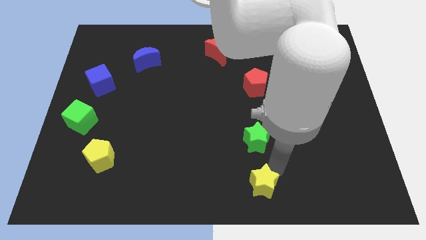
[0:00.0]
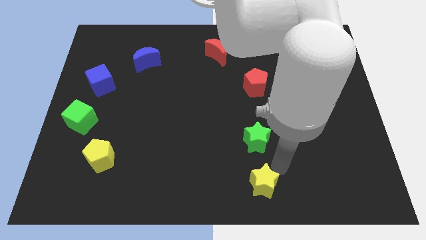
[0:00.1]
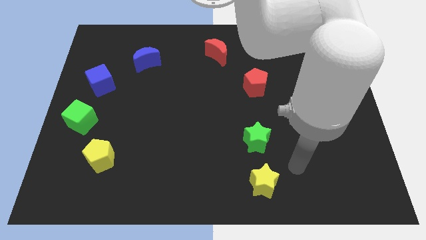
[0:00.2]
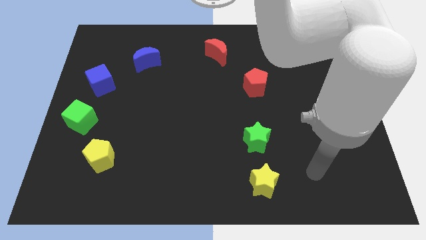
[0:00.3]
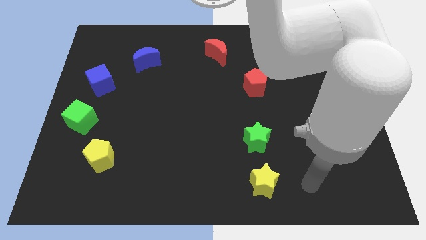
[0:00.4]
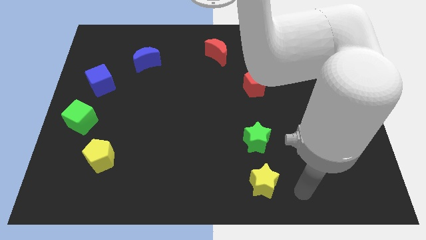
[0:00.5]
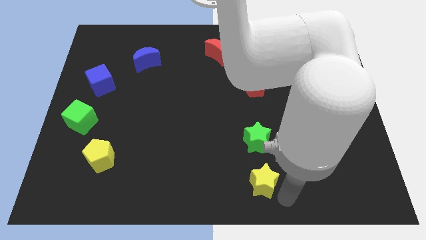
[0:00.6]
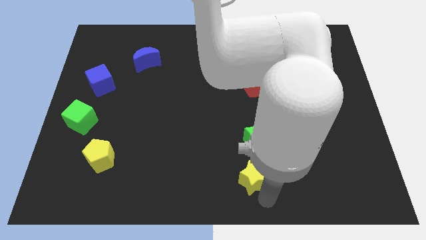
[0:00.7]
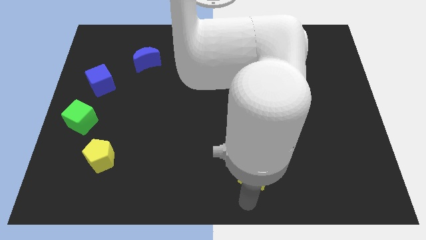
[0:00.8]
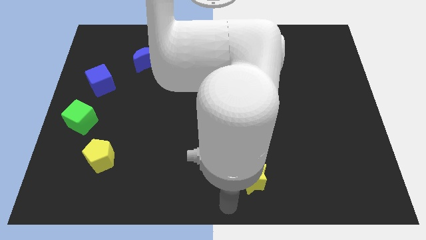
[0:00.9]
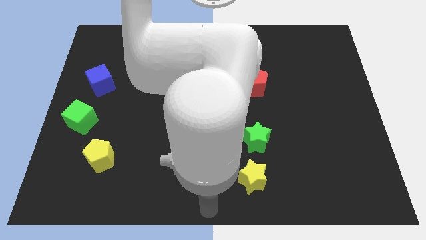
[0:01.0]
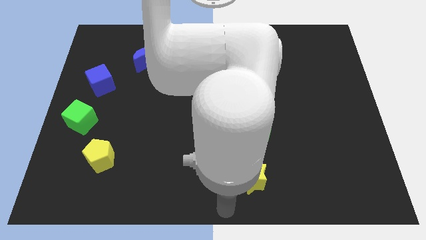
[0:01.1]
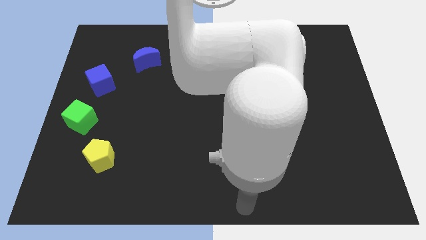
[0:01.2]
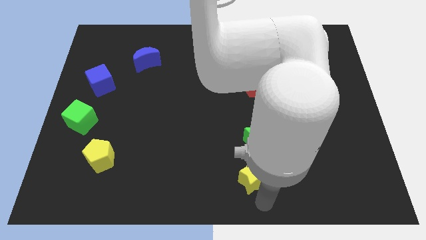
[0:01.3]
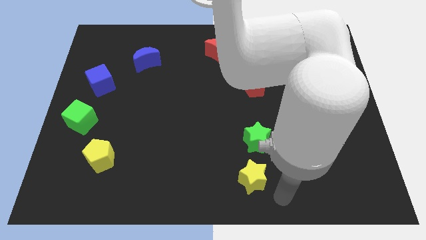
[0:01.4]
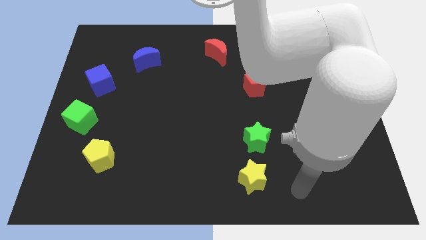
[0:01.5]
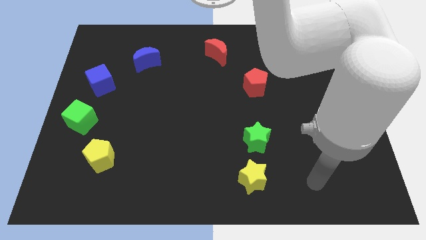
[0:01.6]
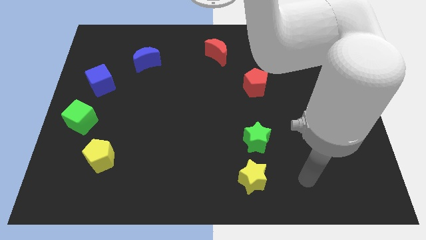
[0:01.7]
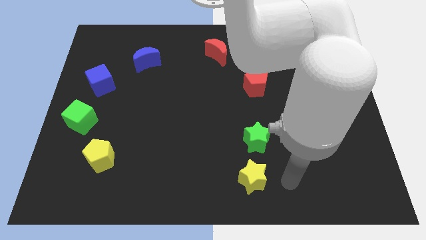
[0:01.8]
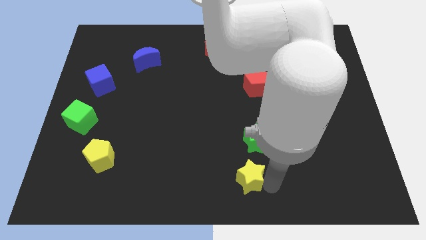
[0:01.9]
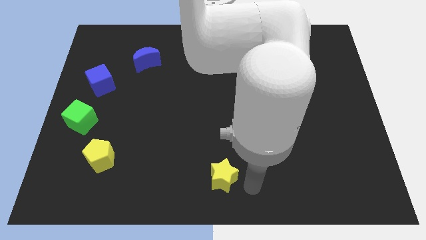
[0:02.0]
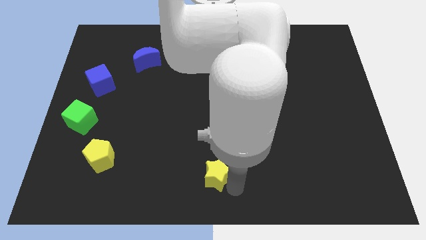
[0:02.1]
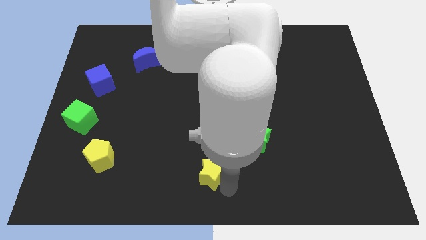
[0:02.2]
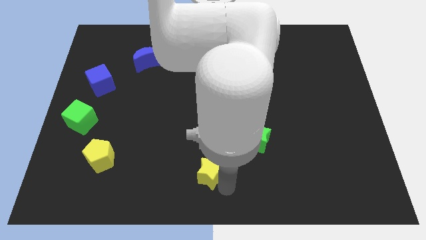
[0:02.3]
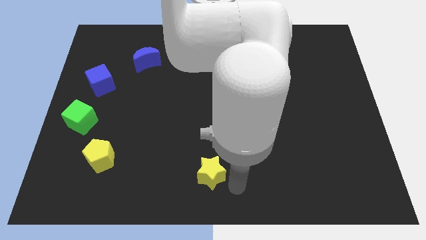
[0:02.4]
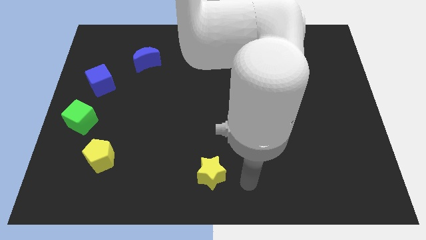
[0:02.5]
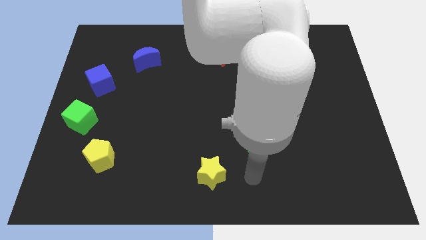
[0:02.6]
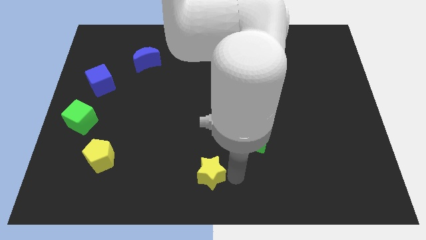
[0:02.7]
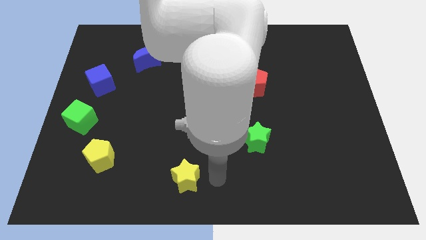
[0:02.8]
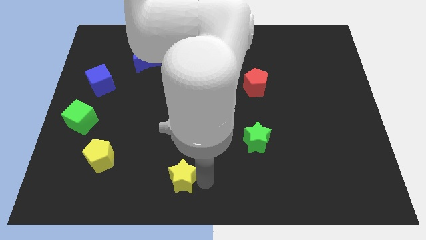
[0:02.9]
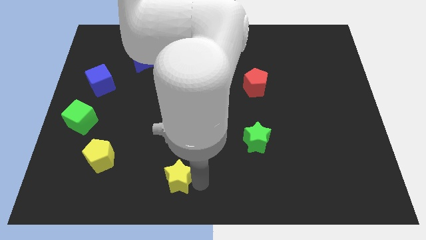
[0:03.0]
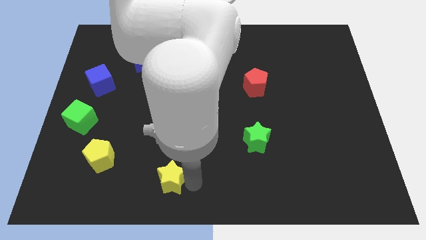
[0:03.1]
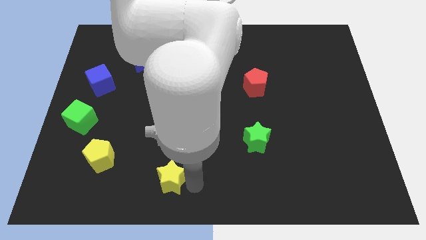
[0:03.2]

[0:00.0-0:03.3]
push the yellow star towards the bottom left of the board

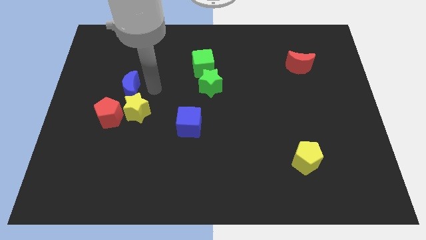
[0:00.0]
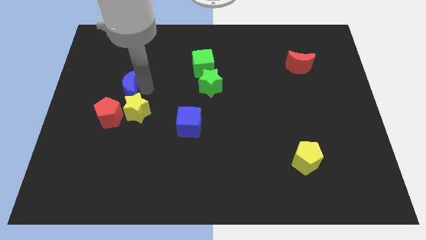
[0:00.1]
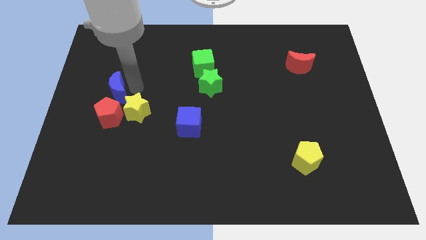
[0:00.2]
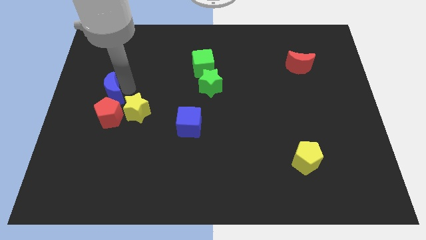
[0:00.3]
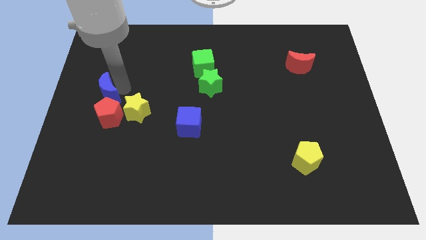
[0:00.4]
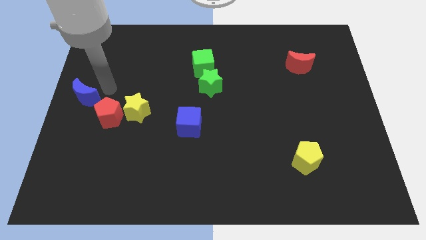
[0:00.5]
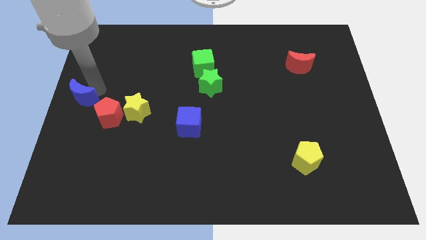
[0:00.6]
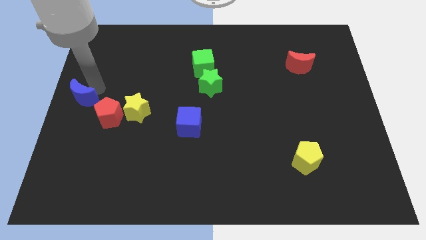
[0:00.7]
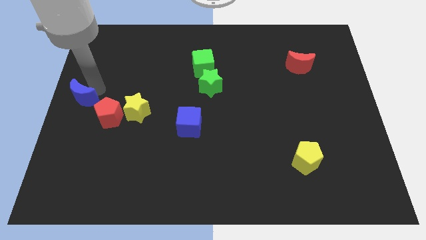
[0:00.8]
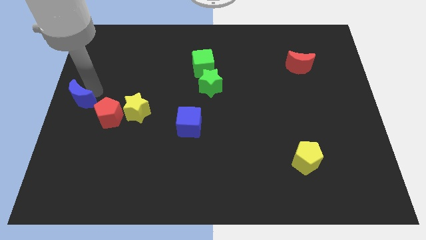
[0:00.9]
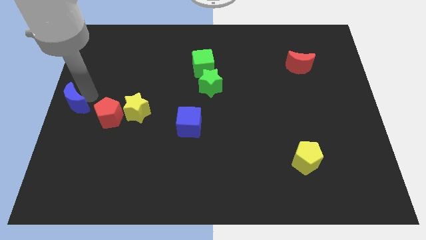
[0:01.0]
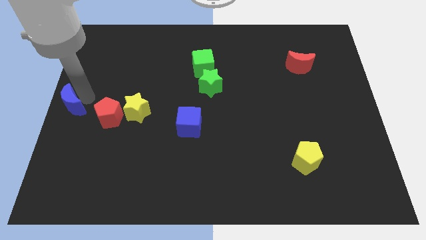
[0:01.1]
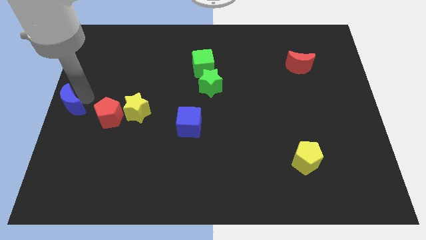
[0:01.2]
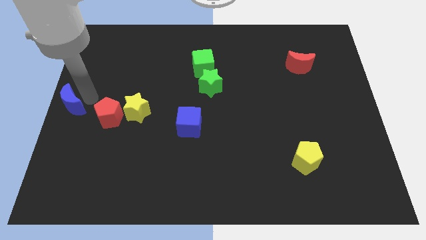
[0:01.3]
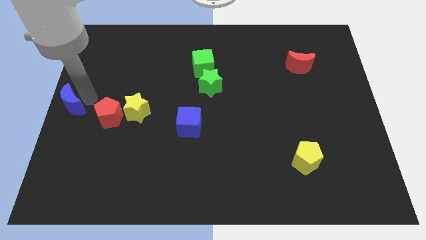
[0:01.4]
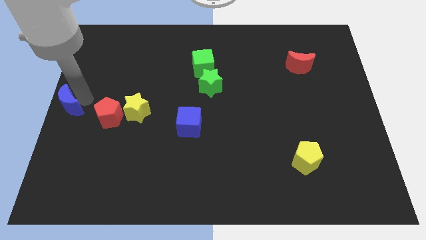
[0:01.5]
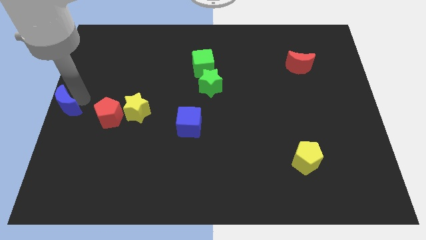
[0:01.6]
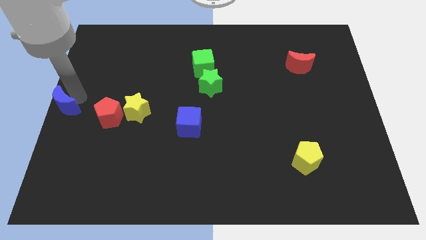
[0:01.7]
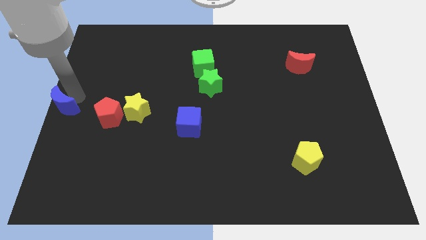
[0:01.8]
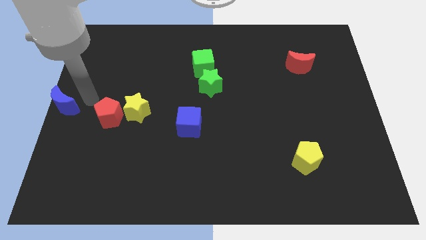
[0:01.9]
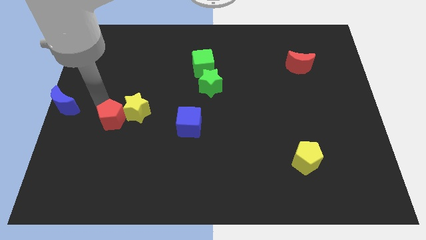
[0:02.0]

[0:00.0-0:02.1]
push the blue moon to thee center left of the board

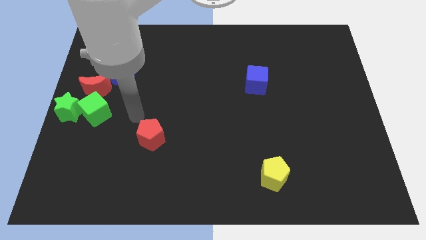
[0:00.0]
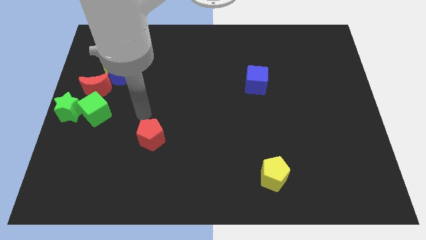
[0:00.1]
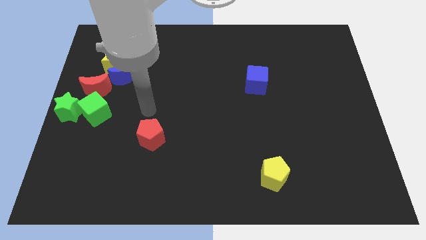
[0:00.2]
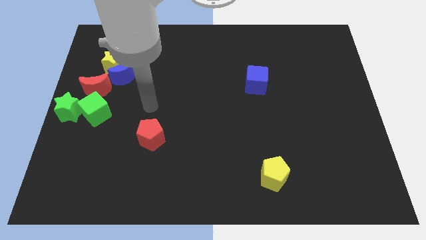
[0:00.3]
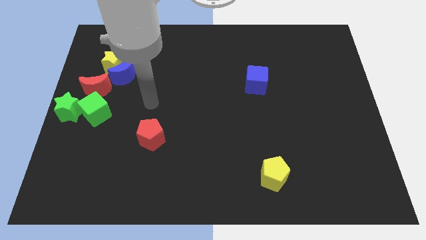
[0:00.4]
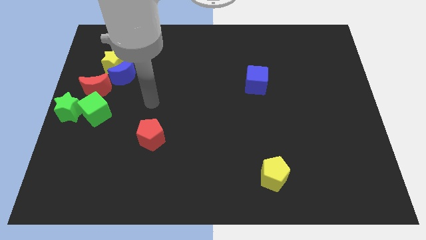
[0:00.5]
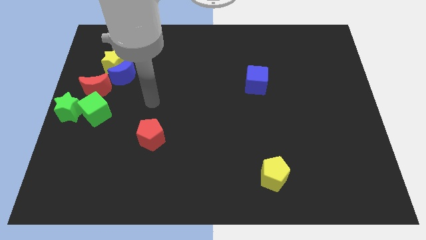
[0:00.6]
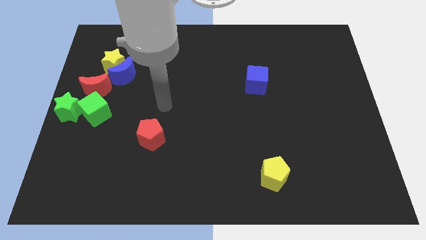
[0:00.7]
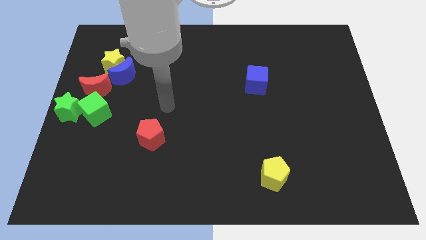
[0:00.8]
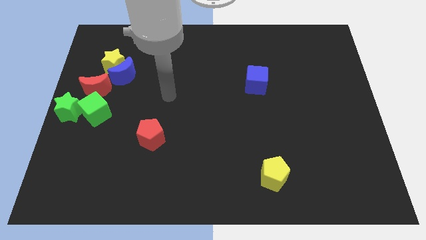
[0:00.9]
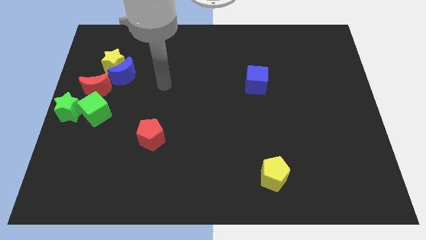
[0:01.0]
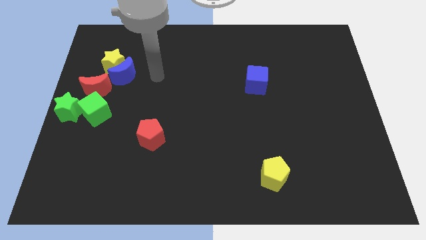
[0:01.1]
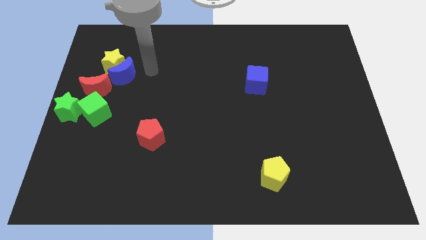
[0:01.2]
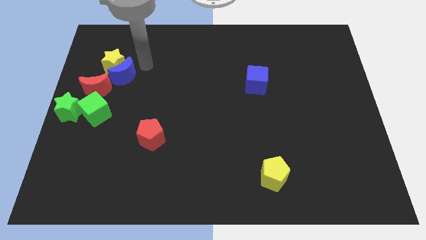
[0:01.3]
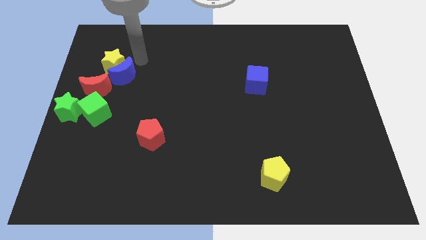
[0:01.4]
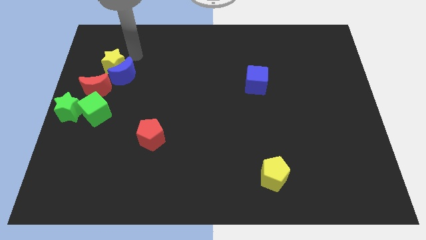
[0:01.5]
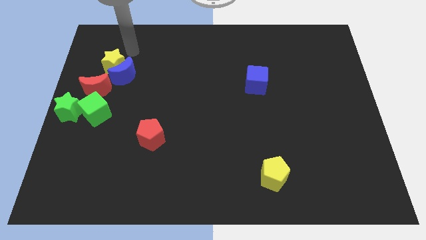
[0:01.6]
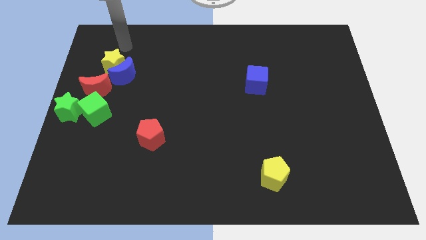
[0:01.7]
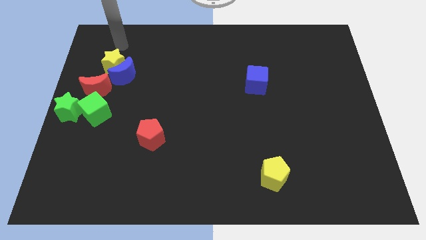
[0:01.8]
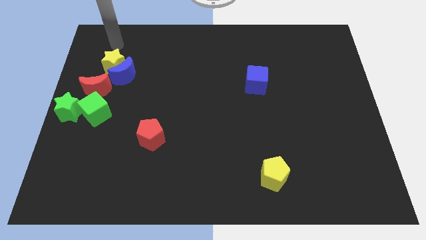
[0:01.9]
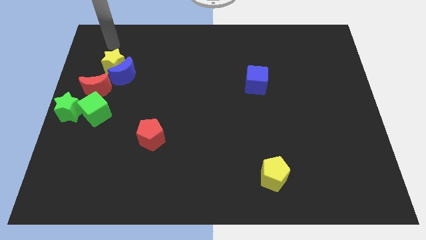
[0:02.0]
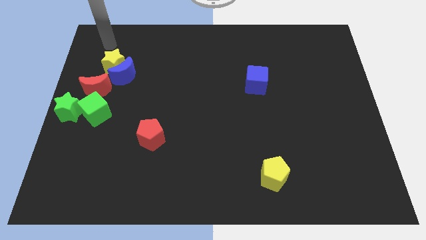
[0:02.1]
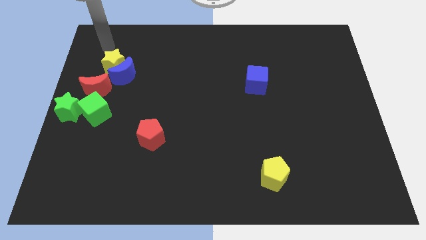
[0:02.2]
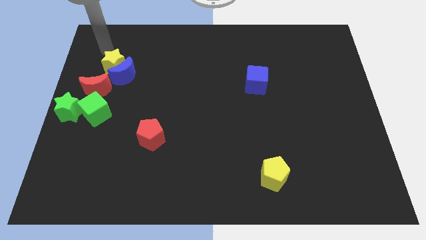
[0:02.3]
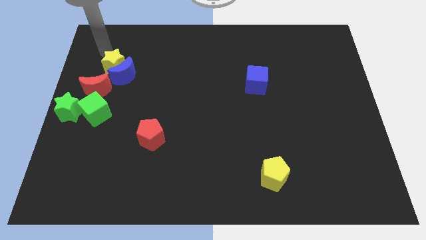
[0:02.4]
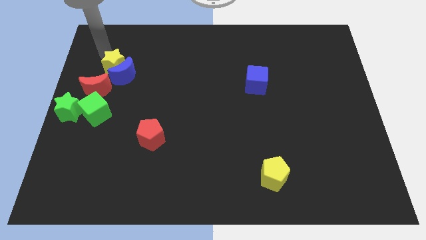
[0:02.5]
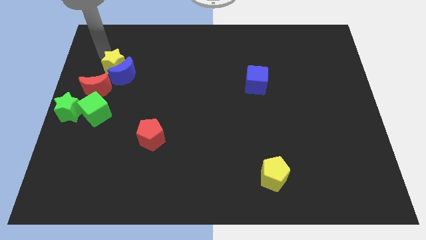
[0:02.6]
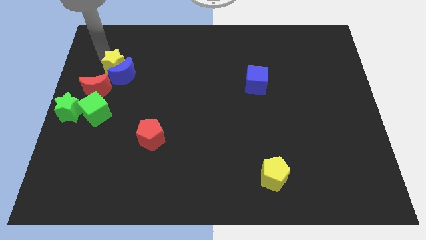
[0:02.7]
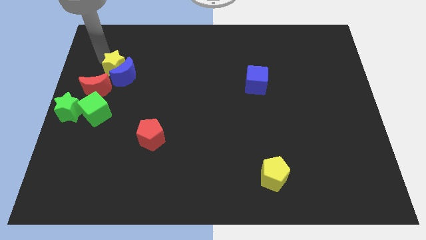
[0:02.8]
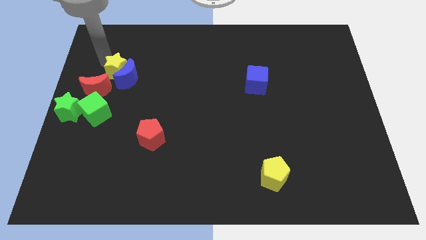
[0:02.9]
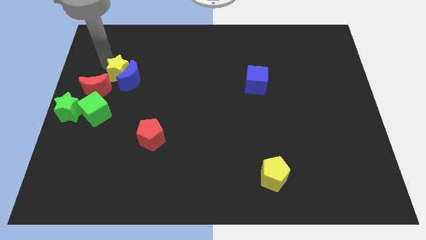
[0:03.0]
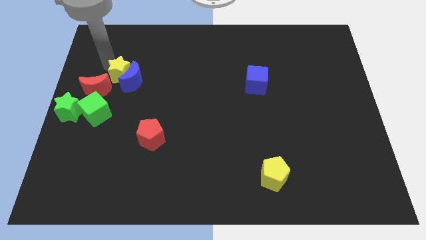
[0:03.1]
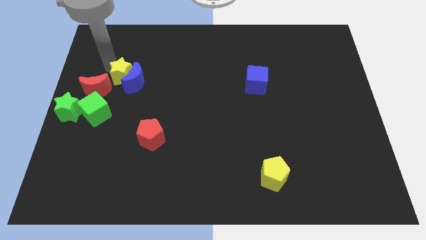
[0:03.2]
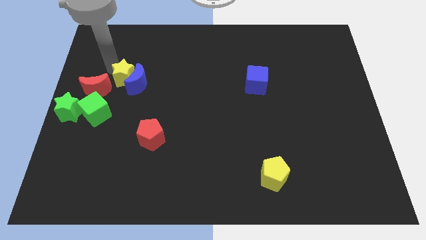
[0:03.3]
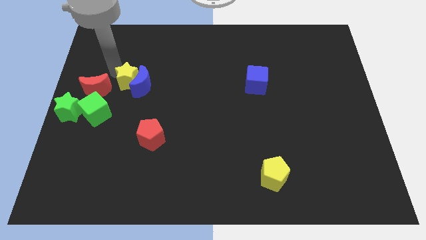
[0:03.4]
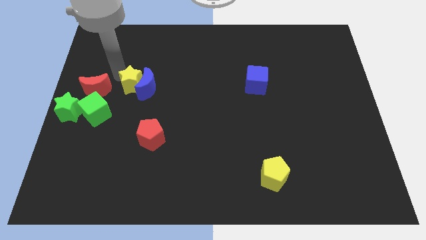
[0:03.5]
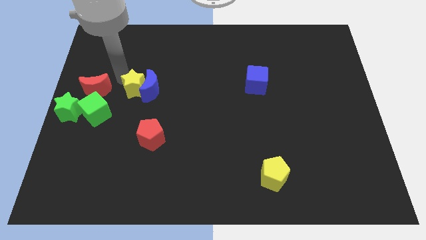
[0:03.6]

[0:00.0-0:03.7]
push the yellow star and blue moon slightly to the right side of the red moon
